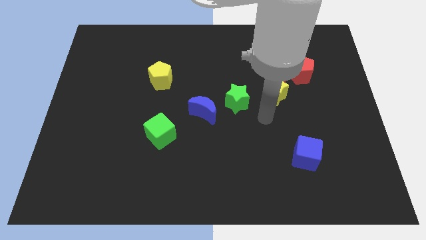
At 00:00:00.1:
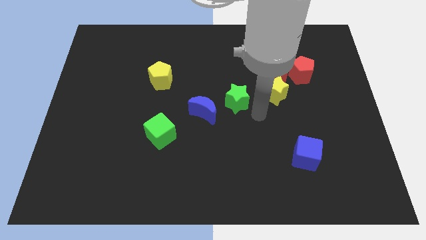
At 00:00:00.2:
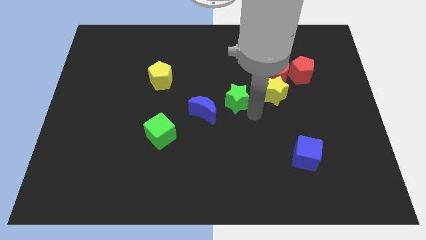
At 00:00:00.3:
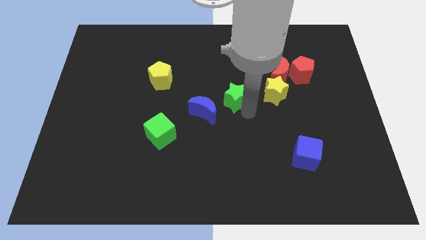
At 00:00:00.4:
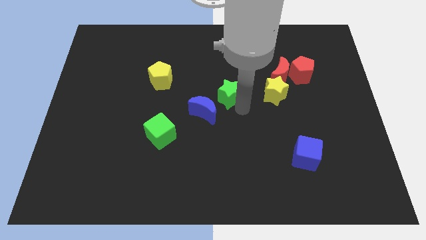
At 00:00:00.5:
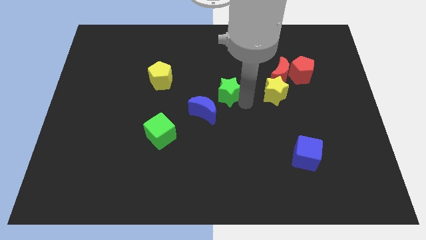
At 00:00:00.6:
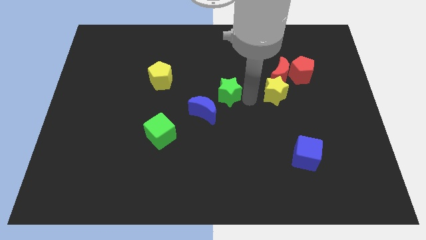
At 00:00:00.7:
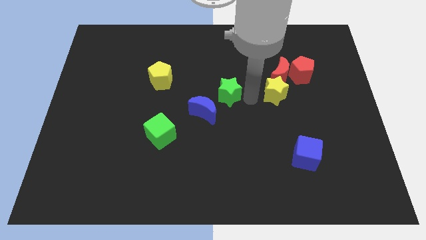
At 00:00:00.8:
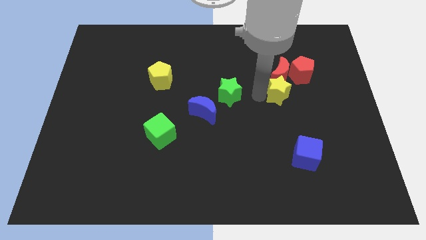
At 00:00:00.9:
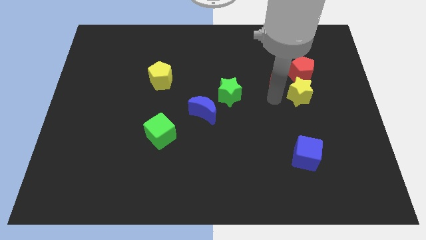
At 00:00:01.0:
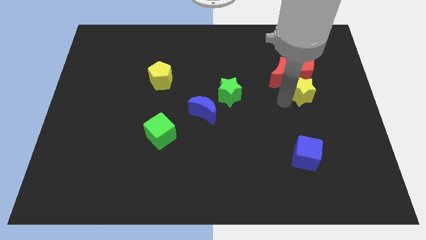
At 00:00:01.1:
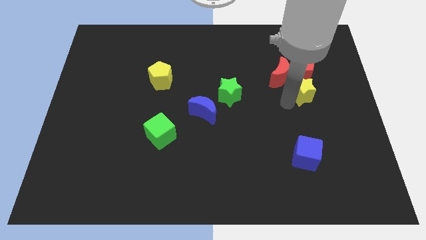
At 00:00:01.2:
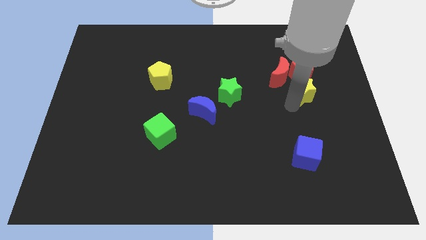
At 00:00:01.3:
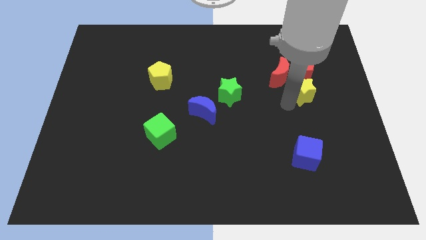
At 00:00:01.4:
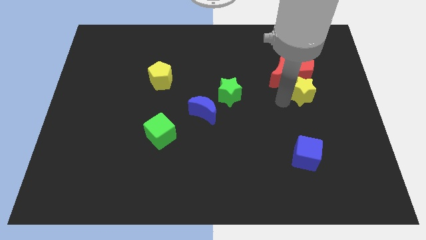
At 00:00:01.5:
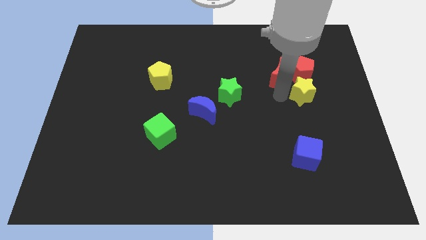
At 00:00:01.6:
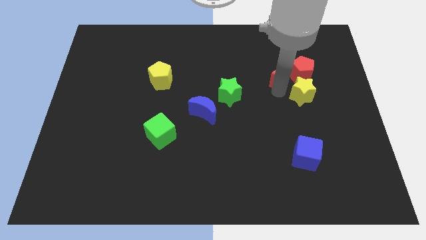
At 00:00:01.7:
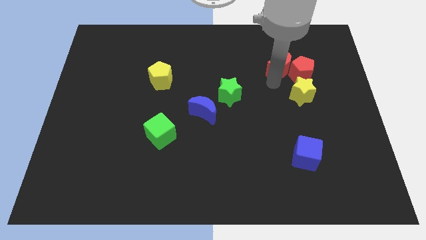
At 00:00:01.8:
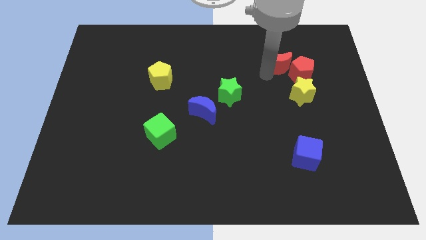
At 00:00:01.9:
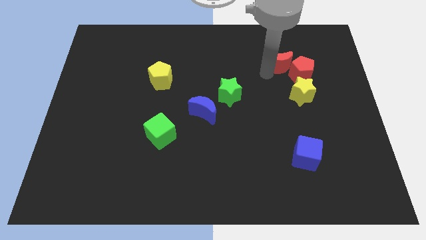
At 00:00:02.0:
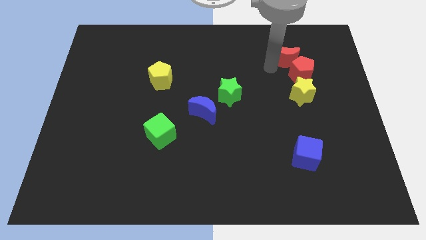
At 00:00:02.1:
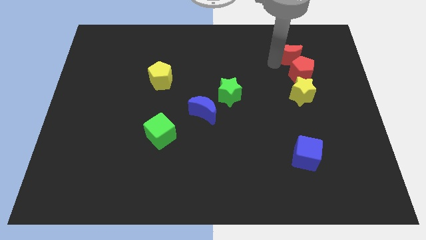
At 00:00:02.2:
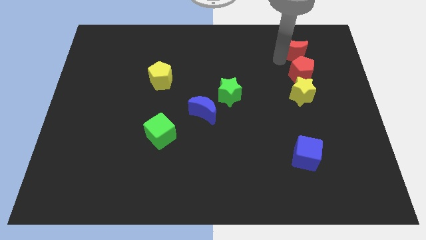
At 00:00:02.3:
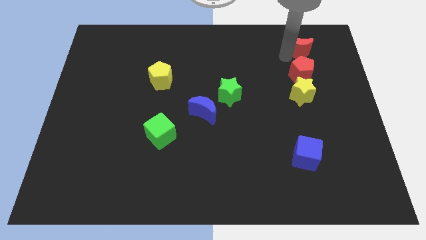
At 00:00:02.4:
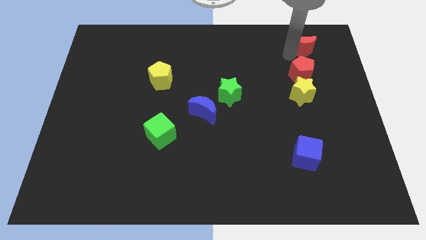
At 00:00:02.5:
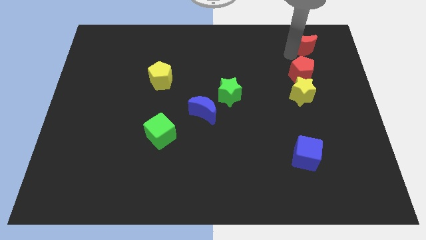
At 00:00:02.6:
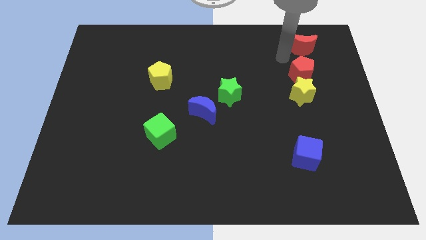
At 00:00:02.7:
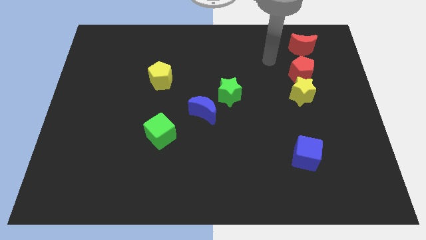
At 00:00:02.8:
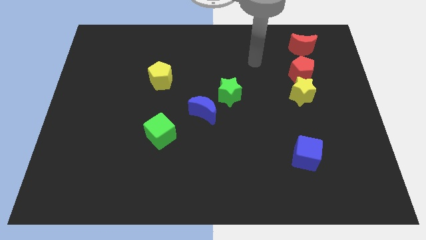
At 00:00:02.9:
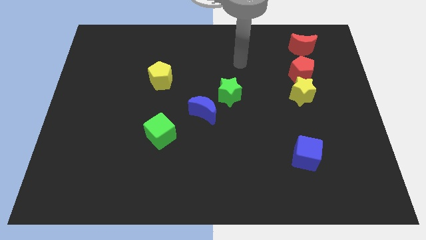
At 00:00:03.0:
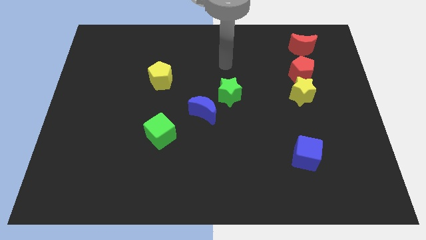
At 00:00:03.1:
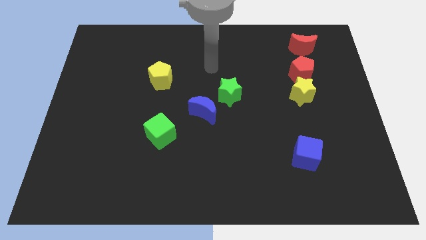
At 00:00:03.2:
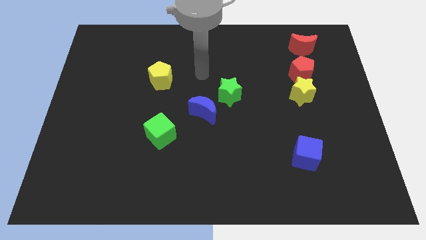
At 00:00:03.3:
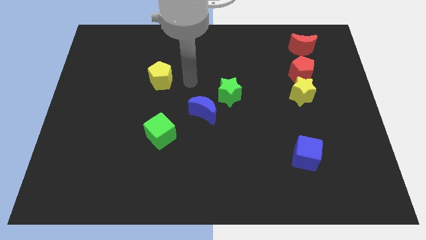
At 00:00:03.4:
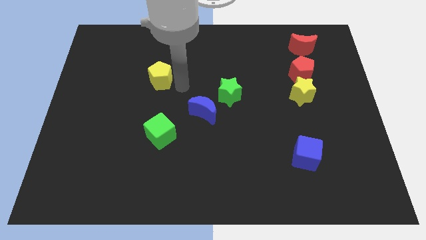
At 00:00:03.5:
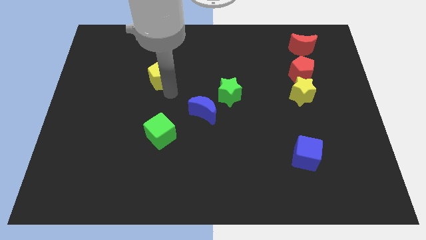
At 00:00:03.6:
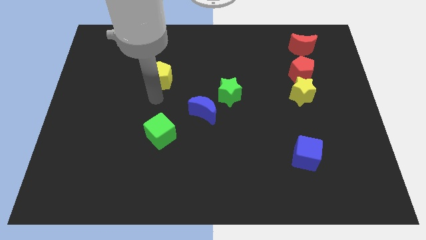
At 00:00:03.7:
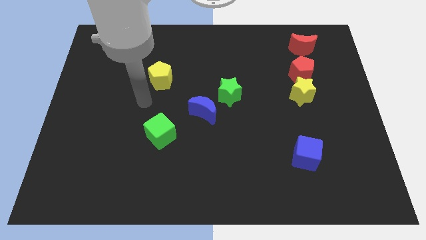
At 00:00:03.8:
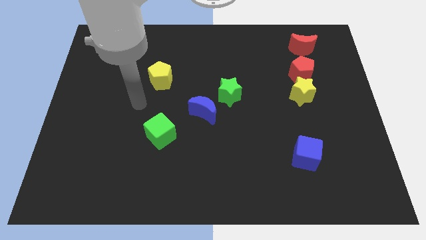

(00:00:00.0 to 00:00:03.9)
separate the green star yellow star and red moon

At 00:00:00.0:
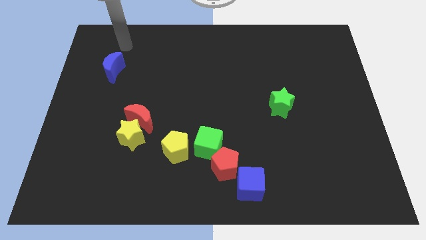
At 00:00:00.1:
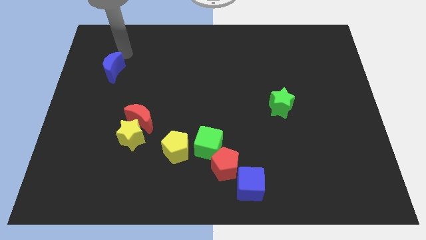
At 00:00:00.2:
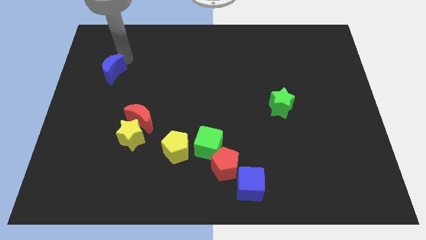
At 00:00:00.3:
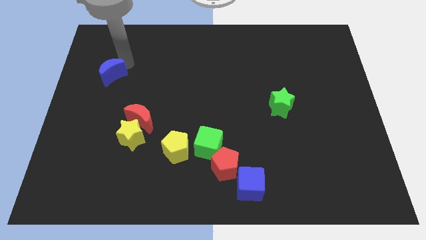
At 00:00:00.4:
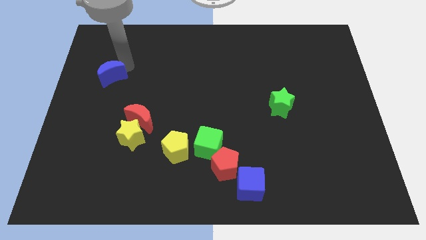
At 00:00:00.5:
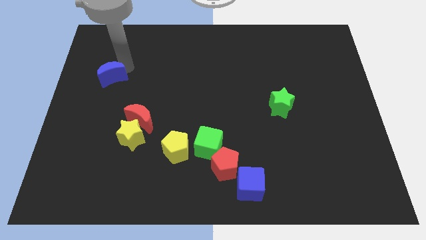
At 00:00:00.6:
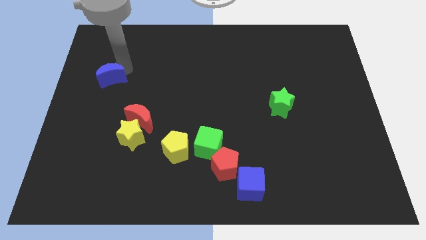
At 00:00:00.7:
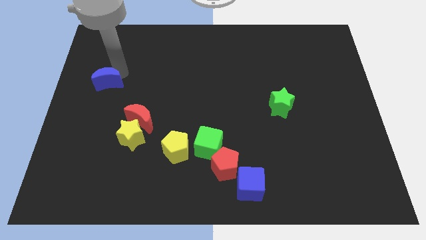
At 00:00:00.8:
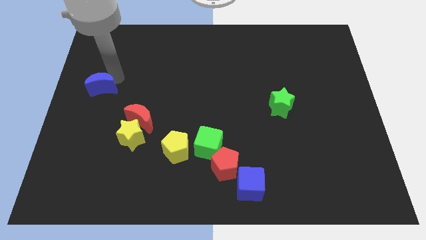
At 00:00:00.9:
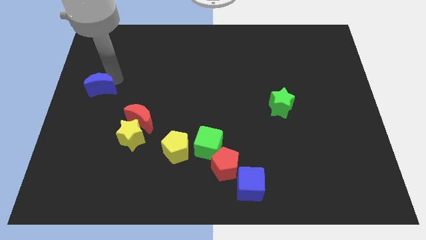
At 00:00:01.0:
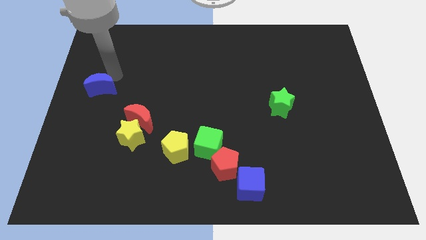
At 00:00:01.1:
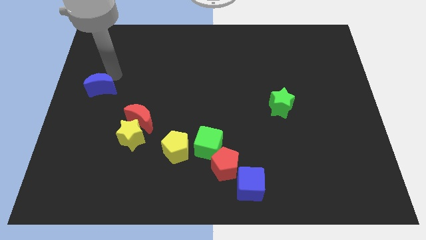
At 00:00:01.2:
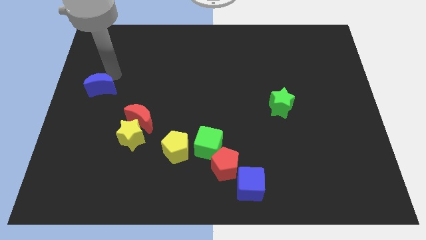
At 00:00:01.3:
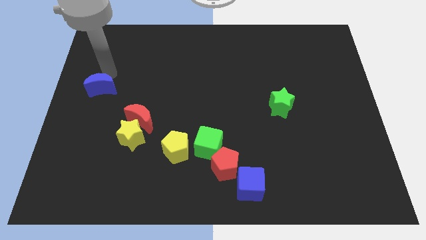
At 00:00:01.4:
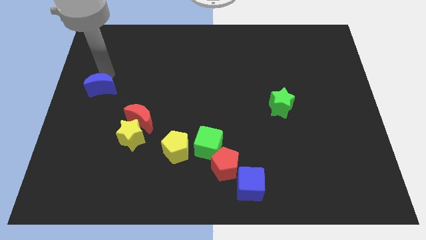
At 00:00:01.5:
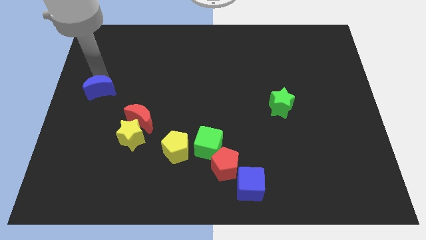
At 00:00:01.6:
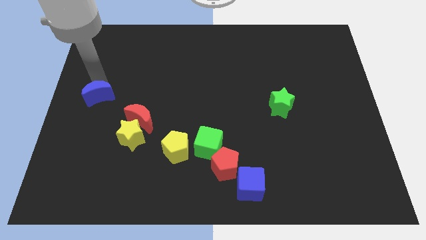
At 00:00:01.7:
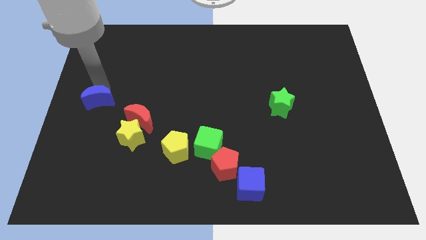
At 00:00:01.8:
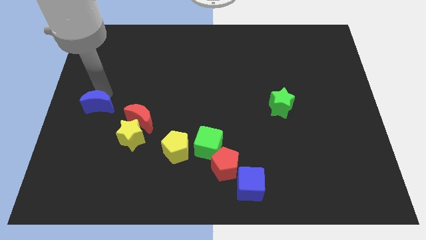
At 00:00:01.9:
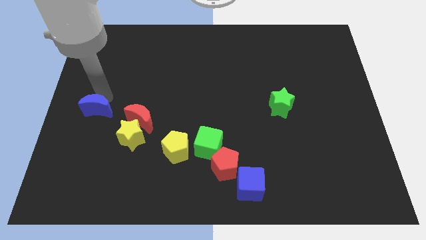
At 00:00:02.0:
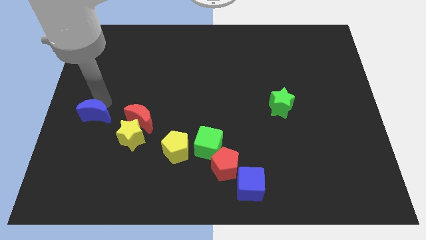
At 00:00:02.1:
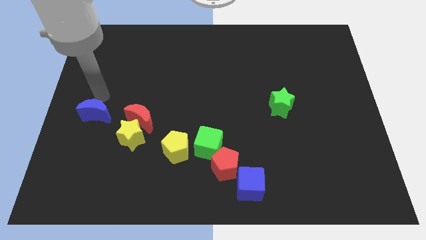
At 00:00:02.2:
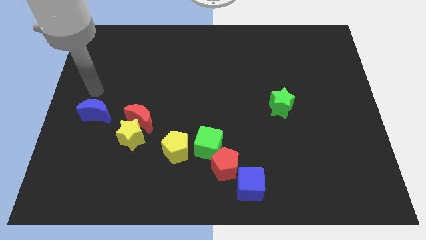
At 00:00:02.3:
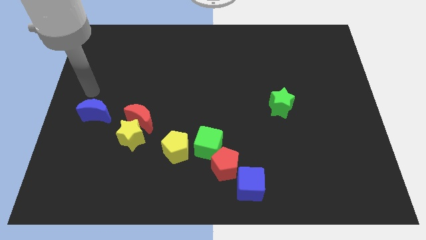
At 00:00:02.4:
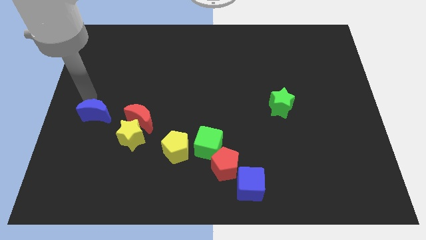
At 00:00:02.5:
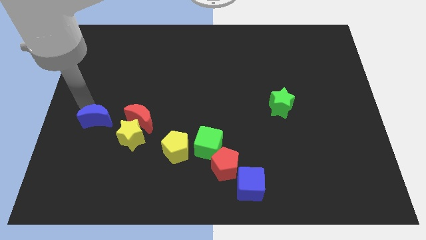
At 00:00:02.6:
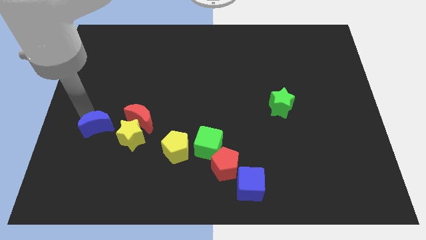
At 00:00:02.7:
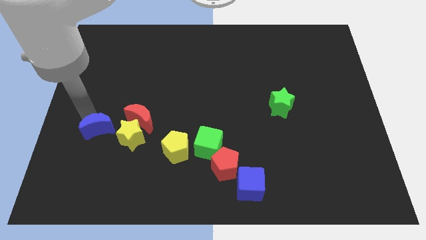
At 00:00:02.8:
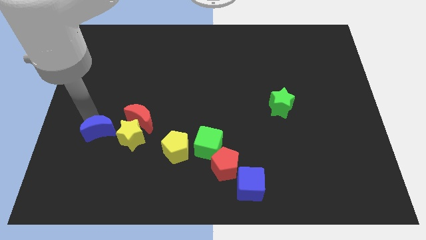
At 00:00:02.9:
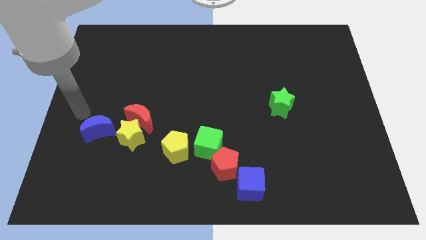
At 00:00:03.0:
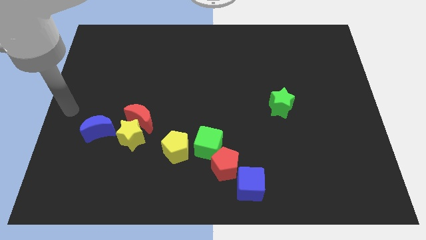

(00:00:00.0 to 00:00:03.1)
place the blue cube on the left side of the yellow star

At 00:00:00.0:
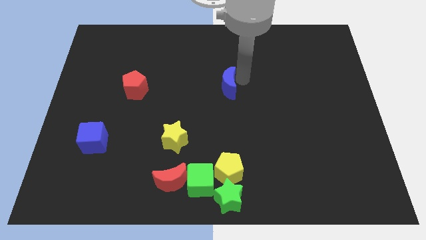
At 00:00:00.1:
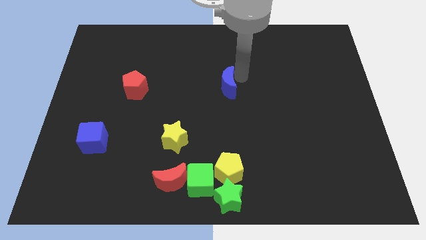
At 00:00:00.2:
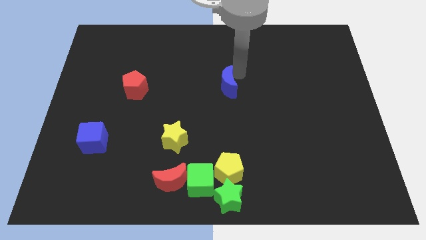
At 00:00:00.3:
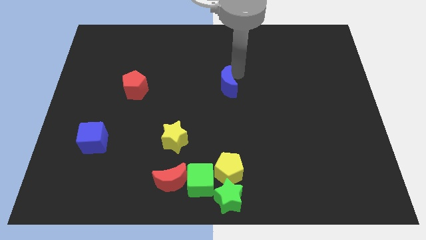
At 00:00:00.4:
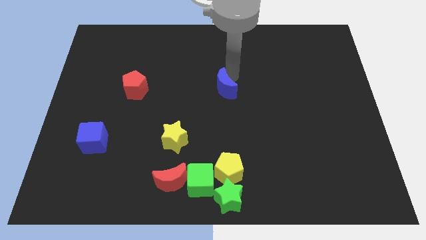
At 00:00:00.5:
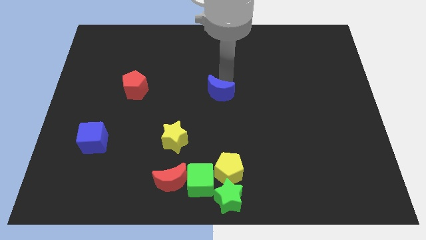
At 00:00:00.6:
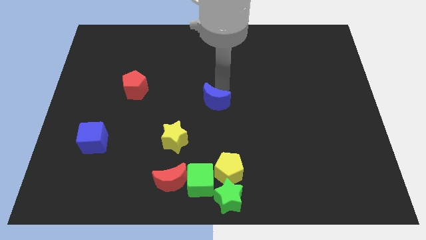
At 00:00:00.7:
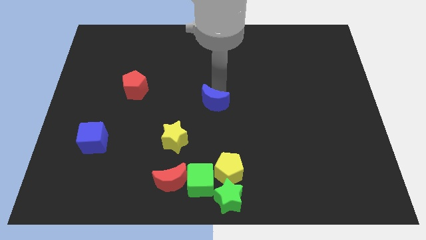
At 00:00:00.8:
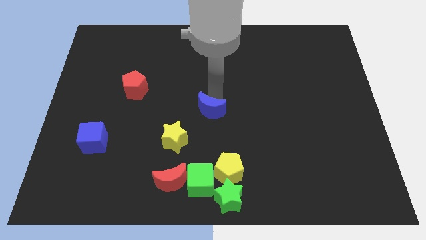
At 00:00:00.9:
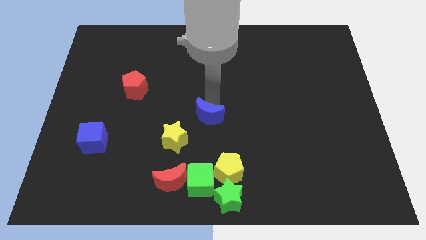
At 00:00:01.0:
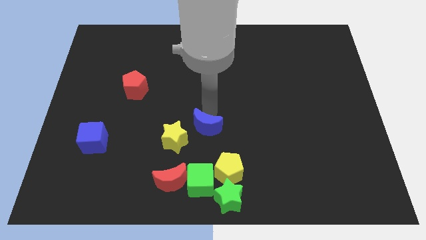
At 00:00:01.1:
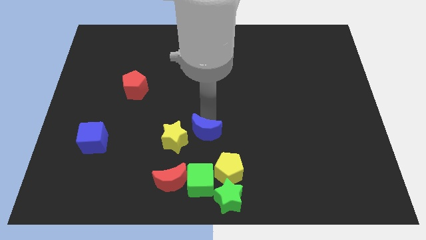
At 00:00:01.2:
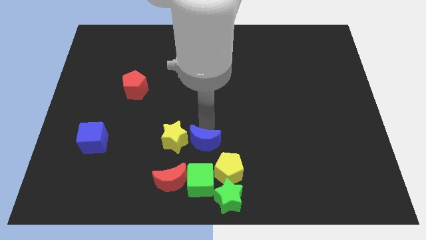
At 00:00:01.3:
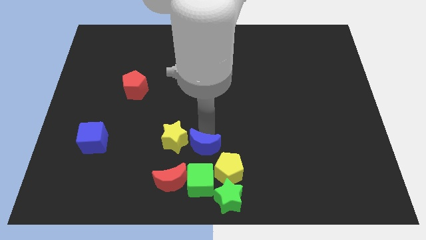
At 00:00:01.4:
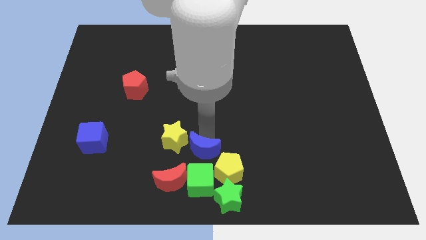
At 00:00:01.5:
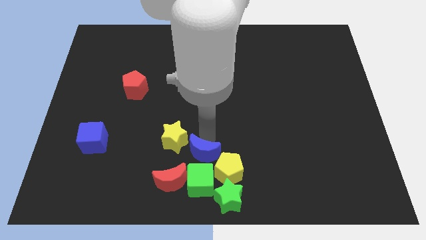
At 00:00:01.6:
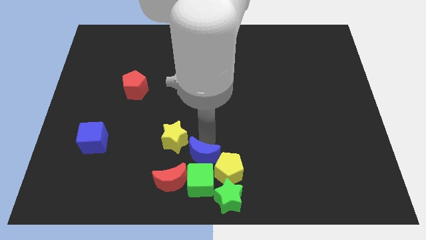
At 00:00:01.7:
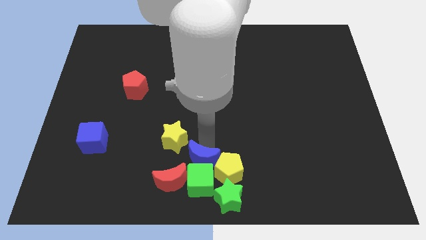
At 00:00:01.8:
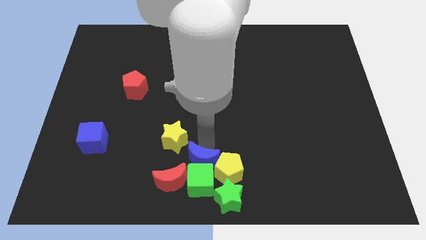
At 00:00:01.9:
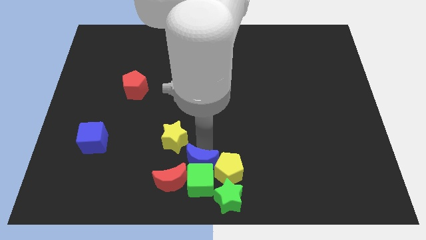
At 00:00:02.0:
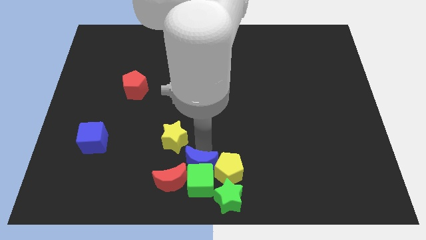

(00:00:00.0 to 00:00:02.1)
move the blue crescent towards the top to the green cube
